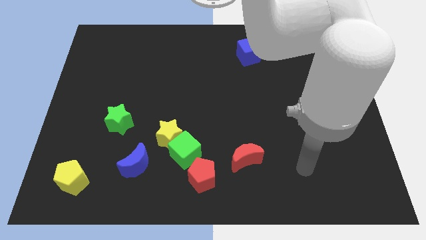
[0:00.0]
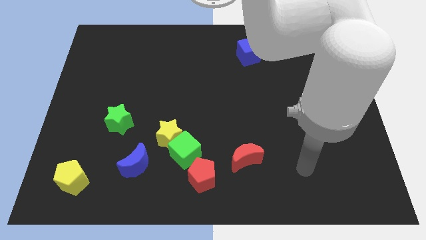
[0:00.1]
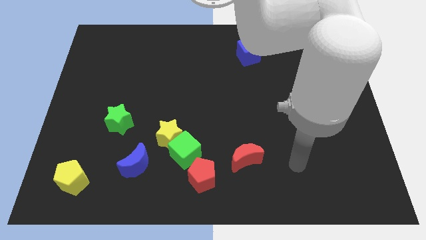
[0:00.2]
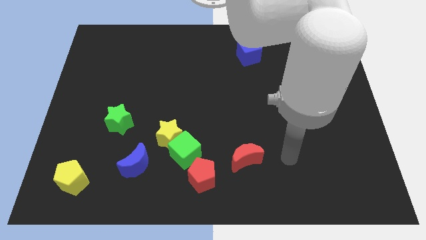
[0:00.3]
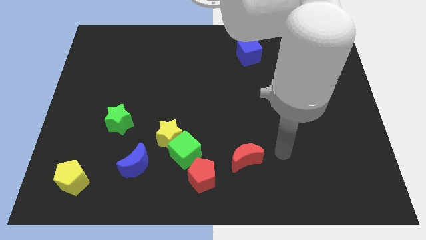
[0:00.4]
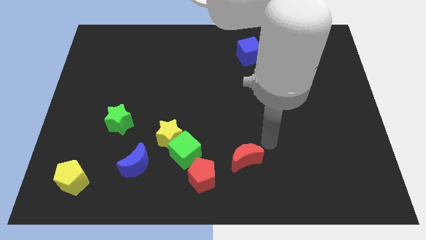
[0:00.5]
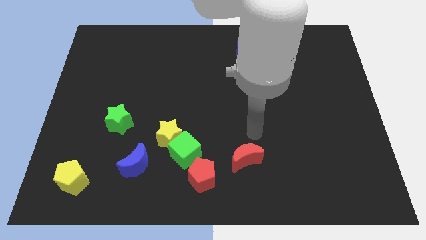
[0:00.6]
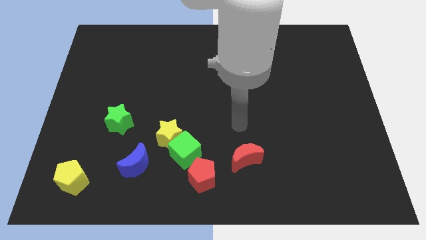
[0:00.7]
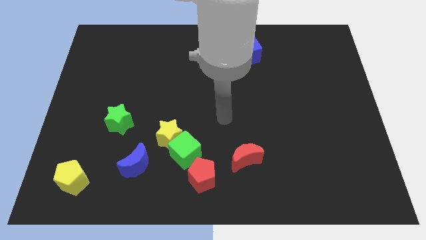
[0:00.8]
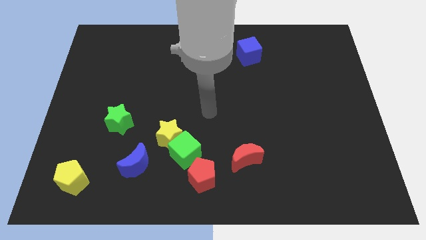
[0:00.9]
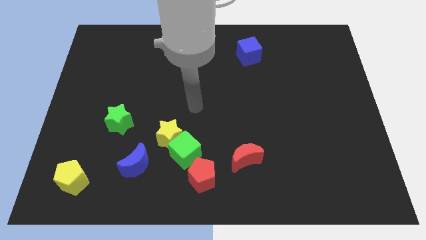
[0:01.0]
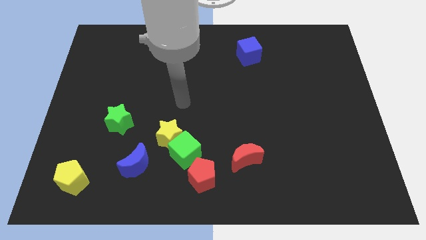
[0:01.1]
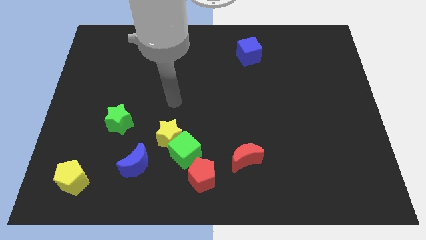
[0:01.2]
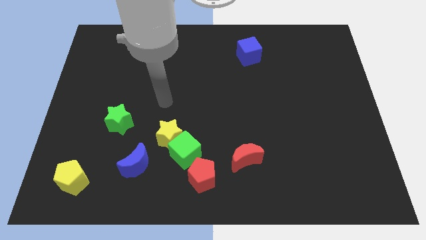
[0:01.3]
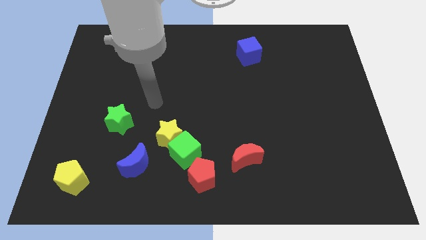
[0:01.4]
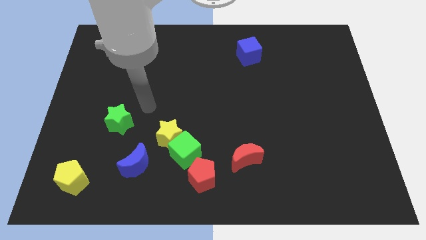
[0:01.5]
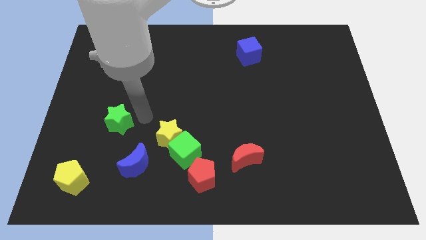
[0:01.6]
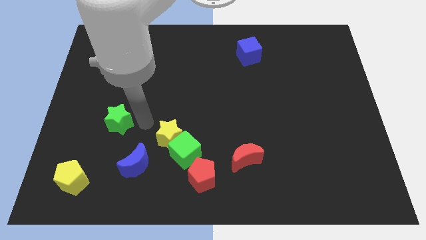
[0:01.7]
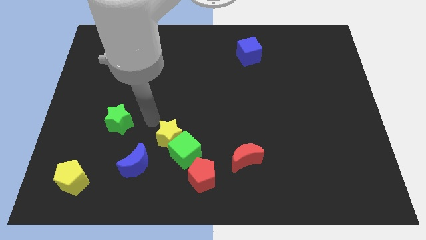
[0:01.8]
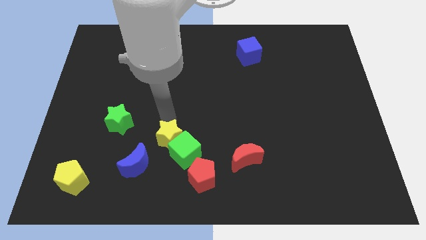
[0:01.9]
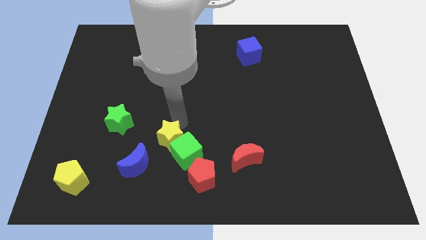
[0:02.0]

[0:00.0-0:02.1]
tap on the top side of the yellow star

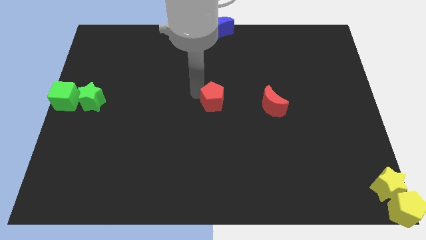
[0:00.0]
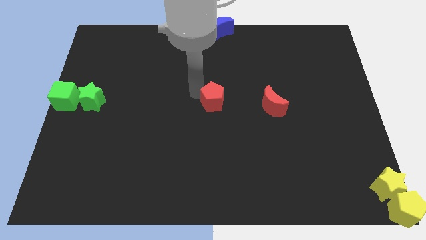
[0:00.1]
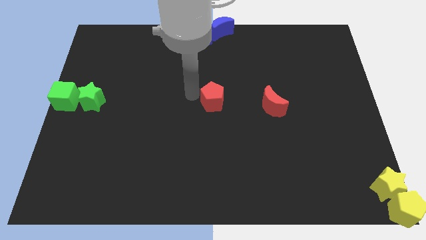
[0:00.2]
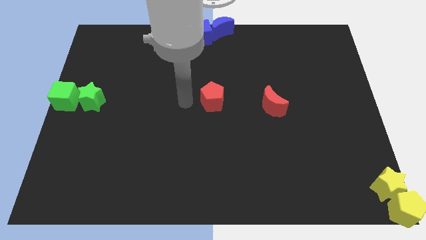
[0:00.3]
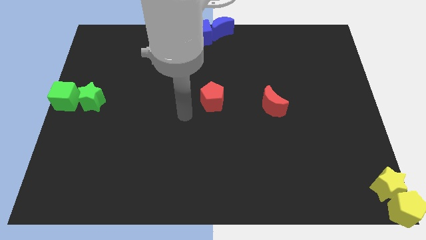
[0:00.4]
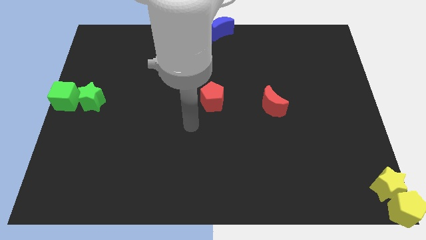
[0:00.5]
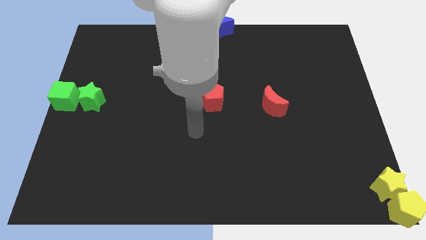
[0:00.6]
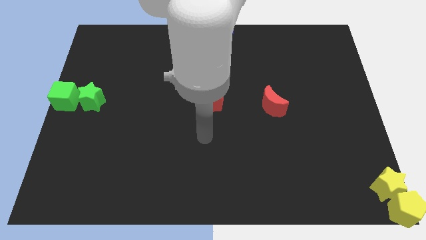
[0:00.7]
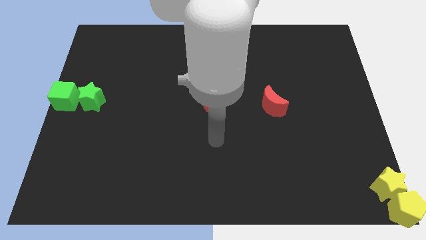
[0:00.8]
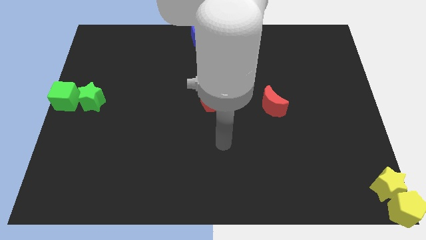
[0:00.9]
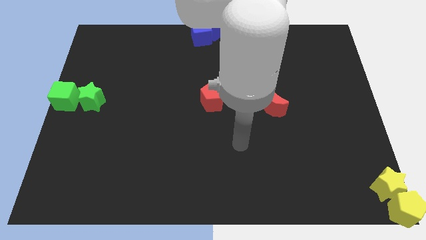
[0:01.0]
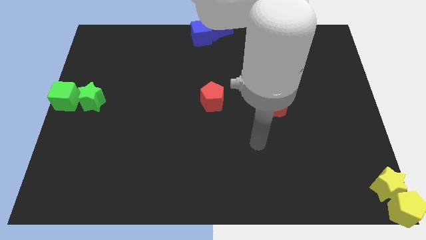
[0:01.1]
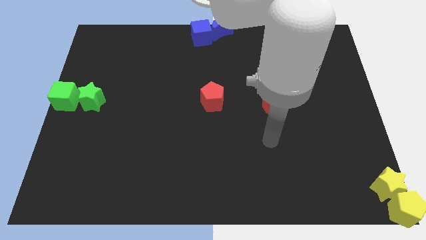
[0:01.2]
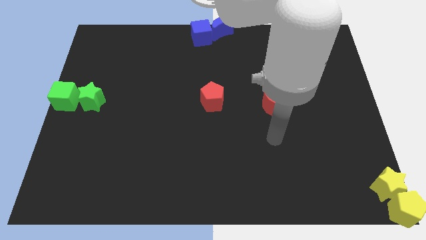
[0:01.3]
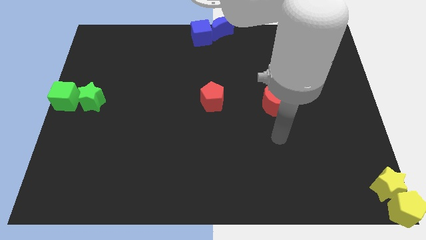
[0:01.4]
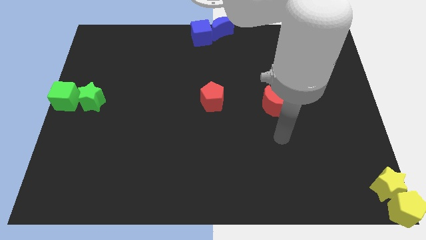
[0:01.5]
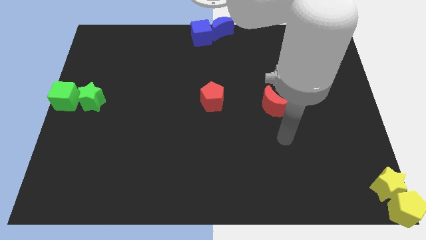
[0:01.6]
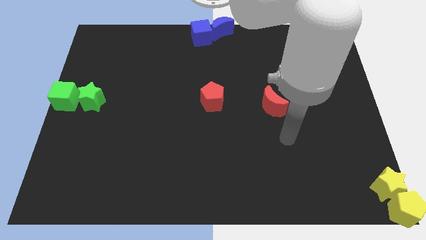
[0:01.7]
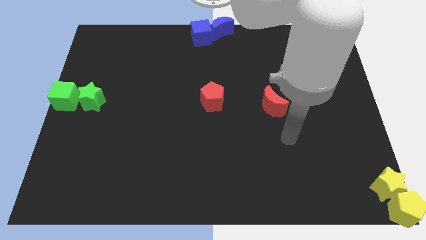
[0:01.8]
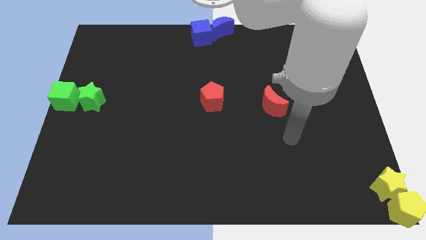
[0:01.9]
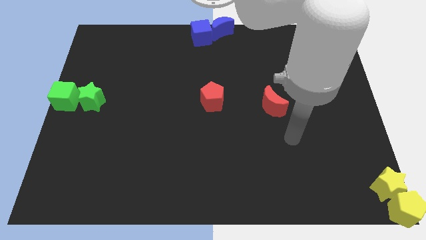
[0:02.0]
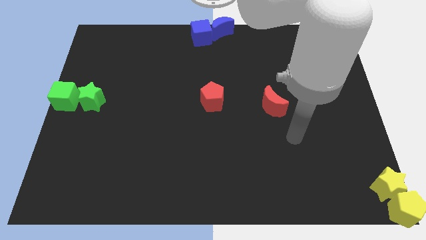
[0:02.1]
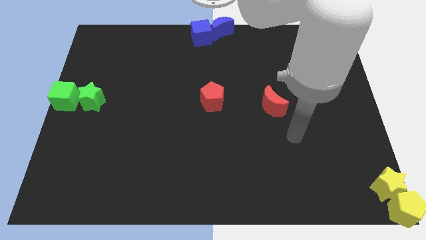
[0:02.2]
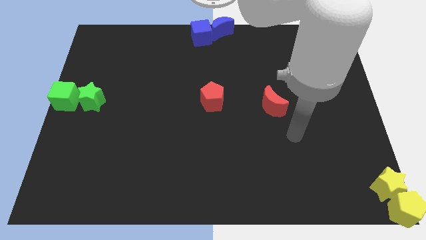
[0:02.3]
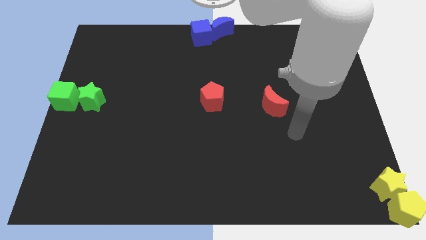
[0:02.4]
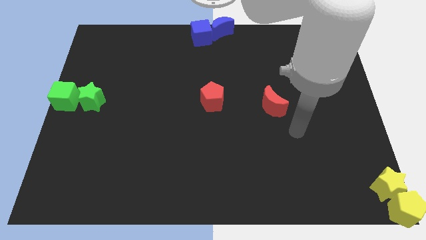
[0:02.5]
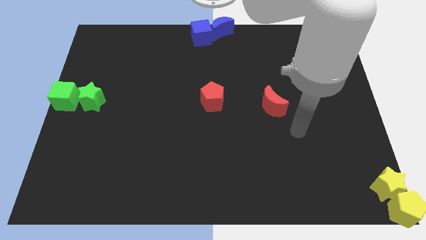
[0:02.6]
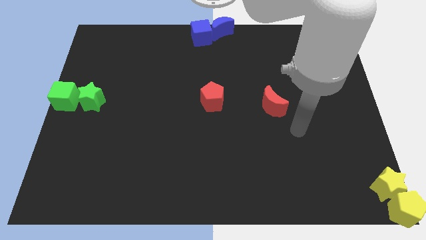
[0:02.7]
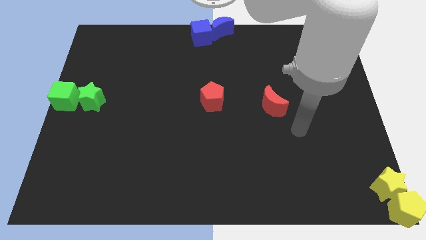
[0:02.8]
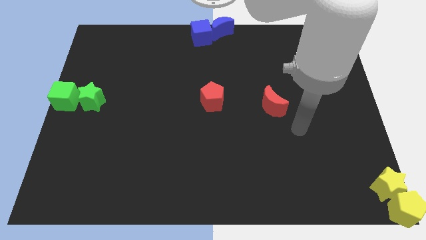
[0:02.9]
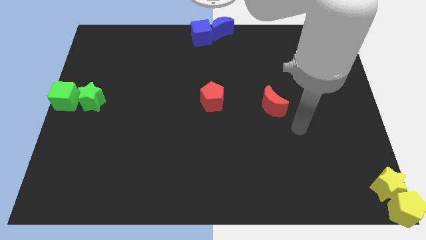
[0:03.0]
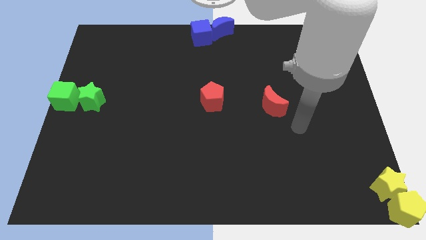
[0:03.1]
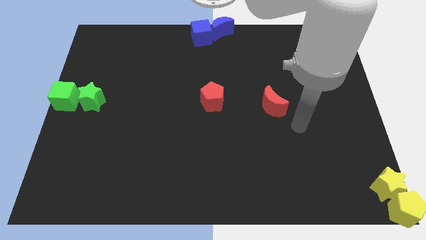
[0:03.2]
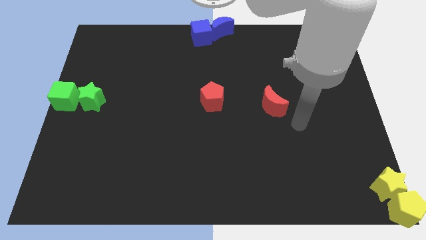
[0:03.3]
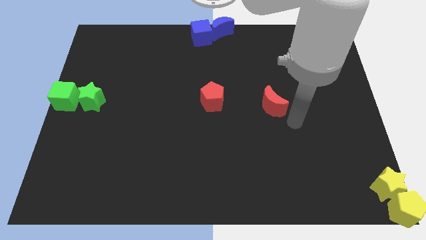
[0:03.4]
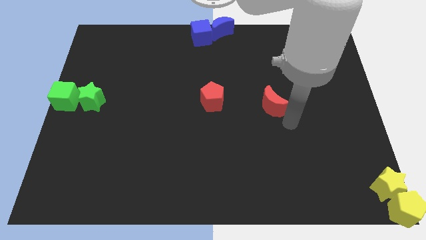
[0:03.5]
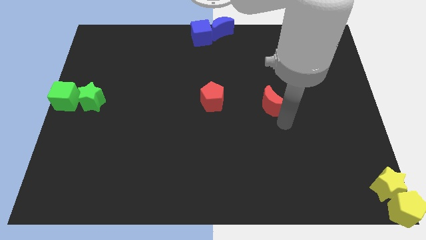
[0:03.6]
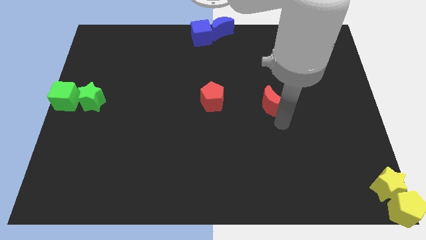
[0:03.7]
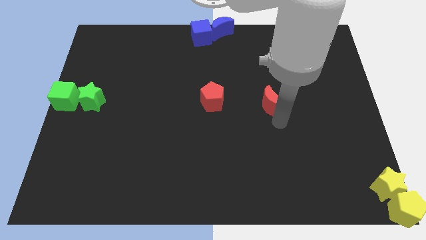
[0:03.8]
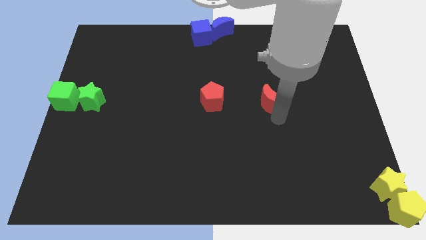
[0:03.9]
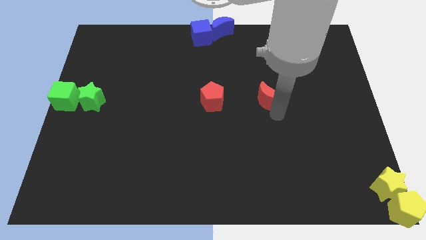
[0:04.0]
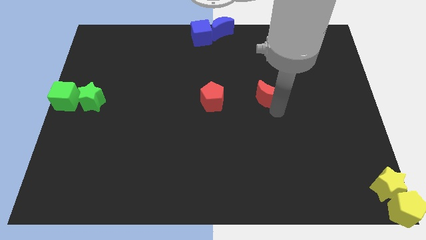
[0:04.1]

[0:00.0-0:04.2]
move red moon to the right of red pentagon

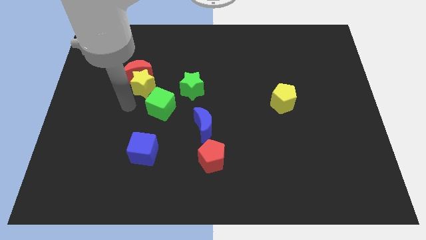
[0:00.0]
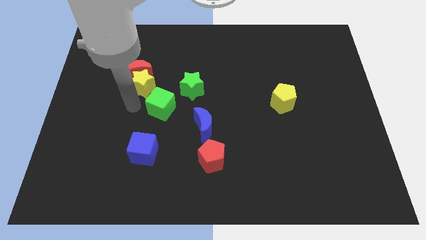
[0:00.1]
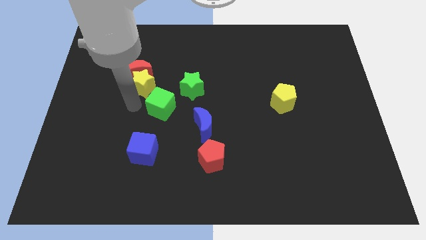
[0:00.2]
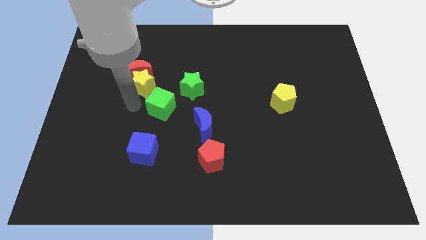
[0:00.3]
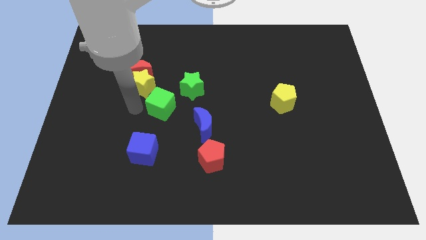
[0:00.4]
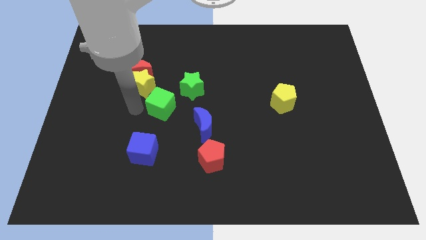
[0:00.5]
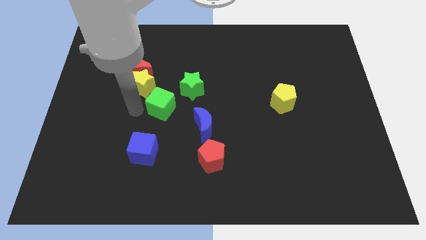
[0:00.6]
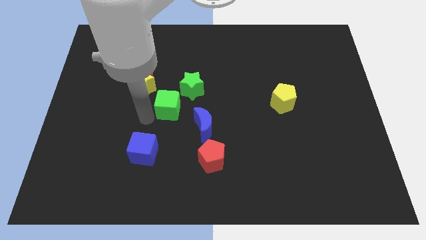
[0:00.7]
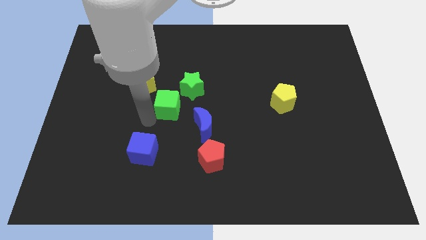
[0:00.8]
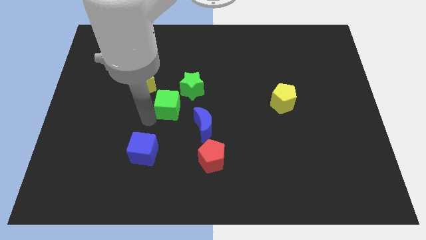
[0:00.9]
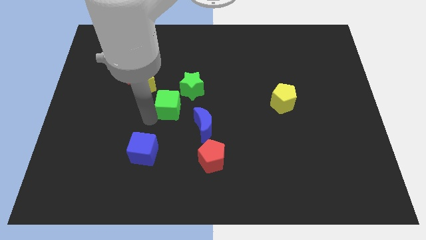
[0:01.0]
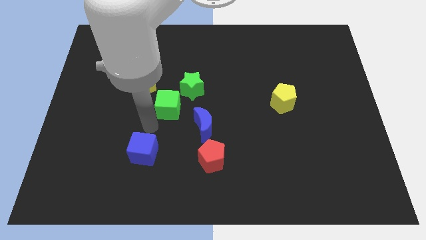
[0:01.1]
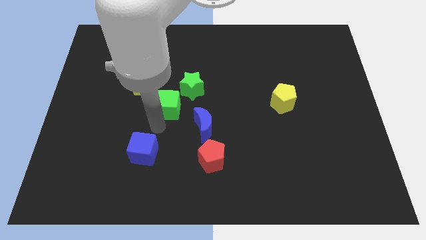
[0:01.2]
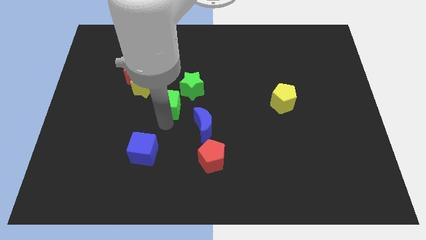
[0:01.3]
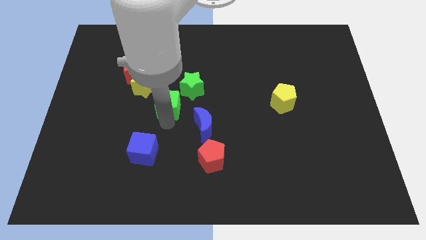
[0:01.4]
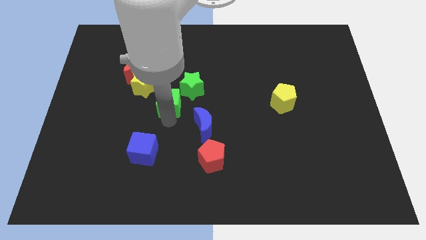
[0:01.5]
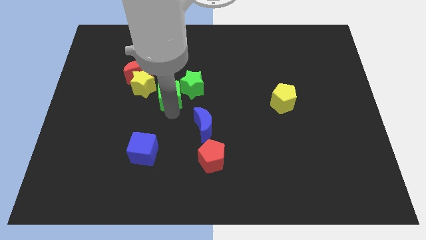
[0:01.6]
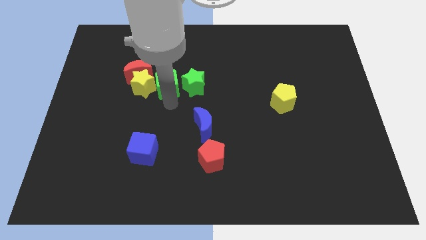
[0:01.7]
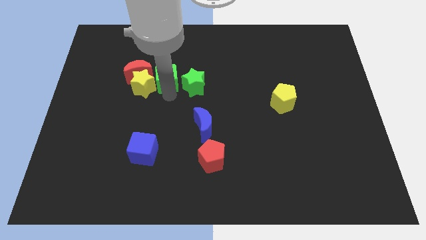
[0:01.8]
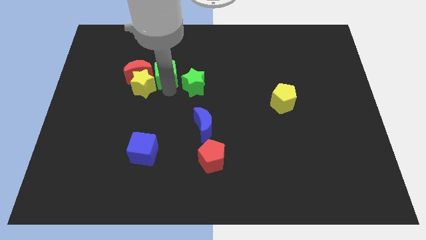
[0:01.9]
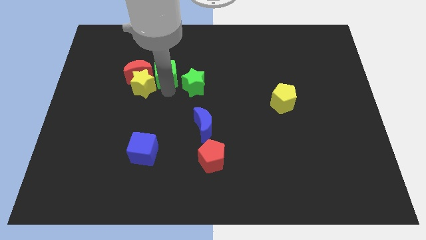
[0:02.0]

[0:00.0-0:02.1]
adjust the green cube in between the green star and yellow star diagonally

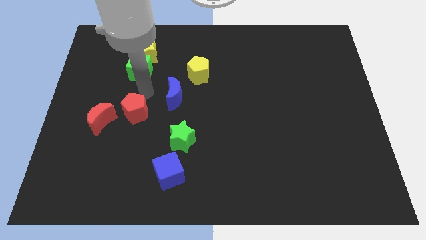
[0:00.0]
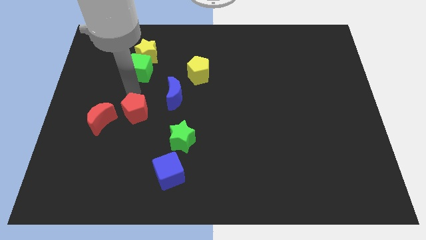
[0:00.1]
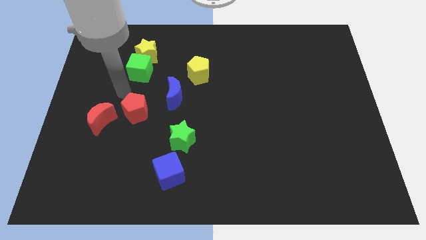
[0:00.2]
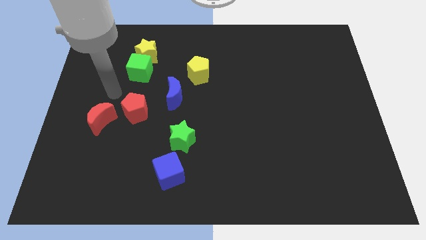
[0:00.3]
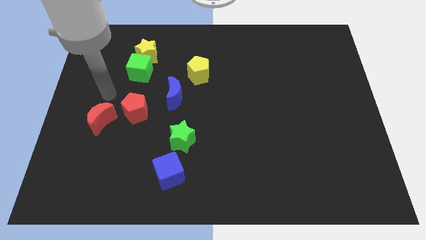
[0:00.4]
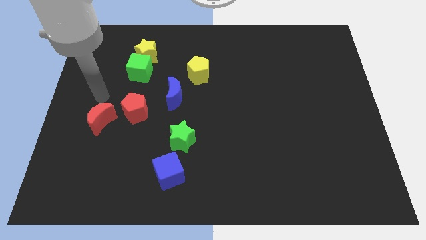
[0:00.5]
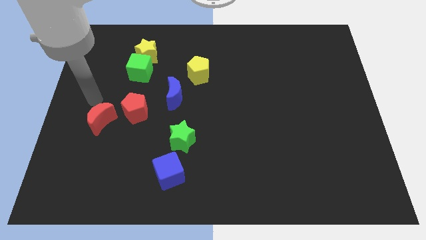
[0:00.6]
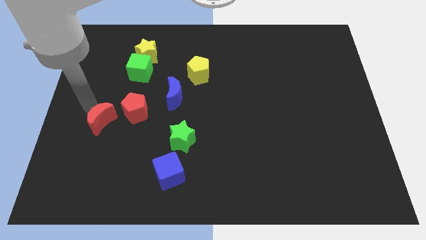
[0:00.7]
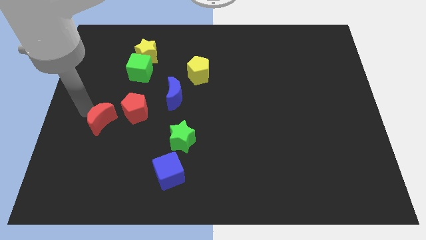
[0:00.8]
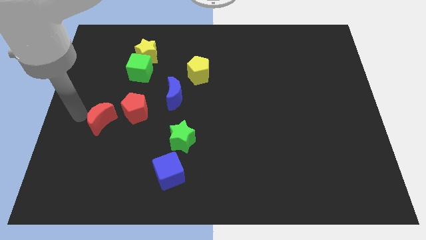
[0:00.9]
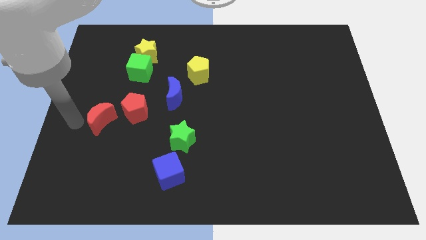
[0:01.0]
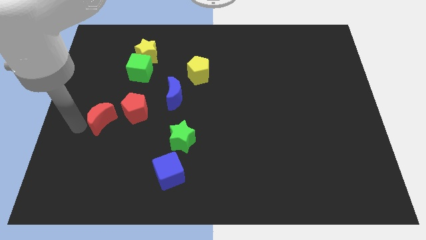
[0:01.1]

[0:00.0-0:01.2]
move your arm to the left of the red moon
